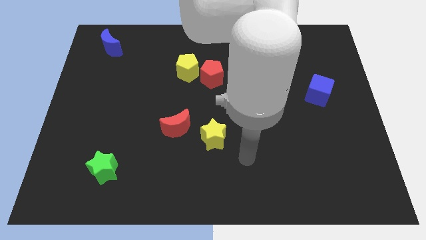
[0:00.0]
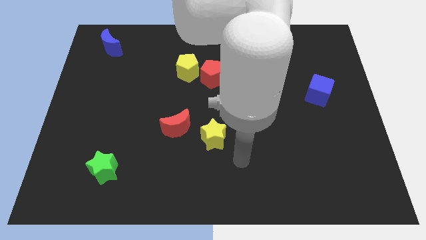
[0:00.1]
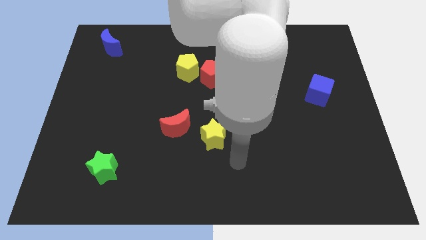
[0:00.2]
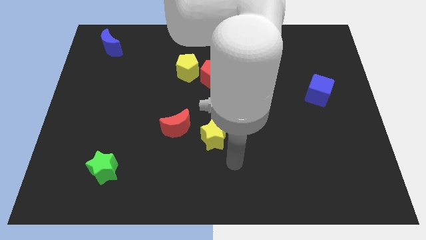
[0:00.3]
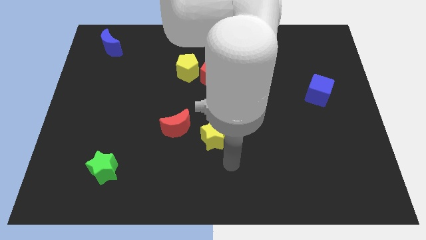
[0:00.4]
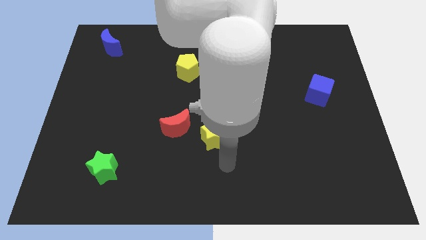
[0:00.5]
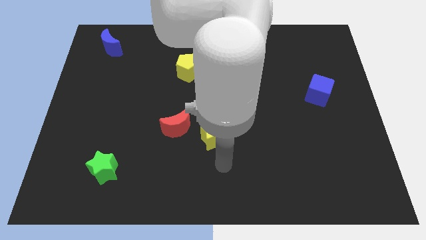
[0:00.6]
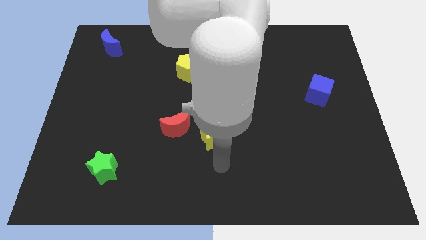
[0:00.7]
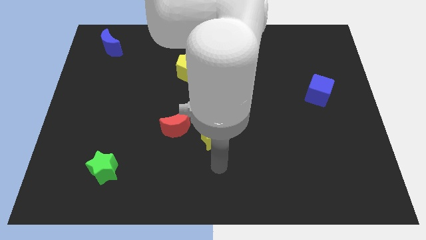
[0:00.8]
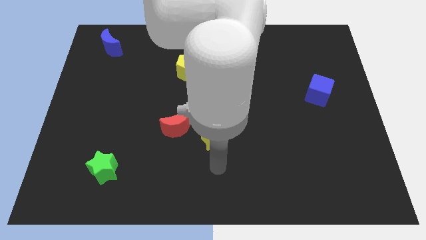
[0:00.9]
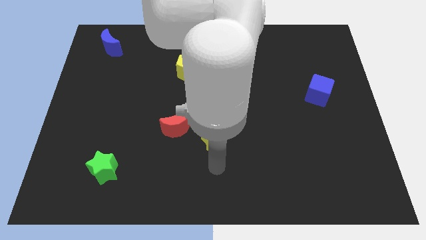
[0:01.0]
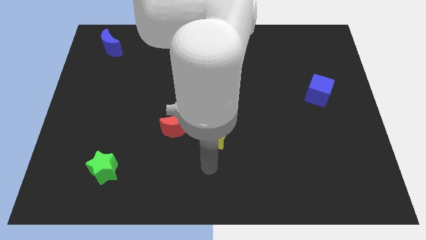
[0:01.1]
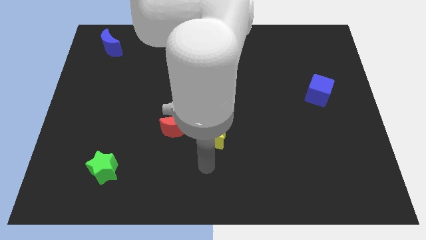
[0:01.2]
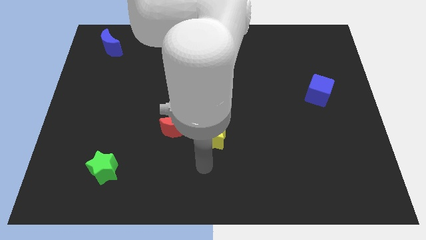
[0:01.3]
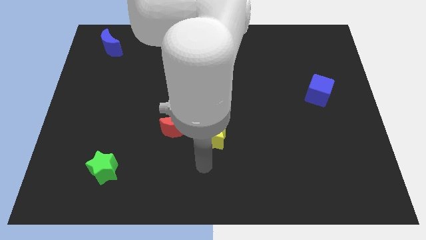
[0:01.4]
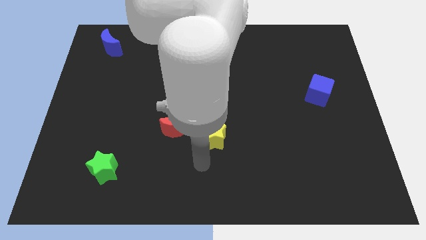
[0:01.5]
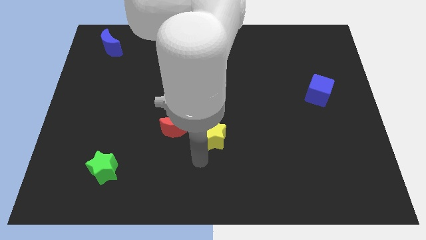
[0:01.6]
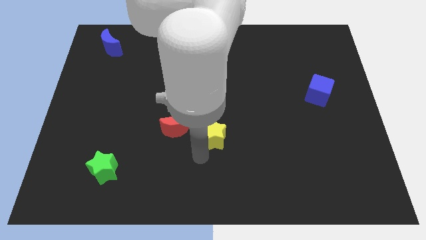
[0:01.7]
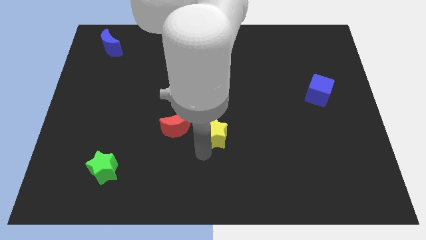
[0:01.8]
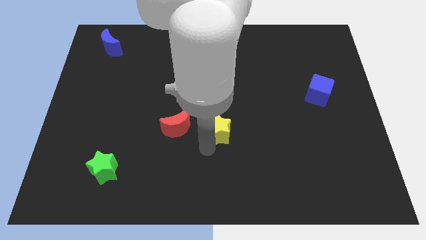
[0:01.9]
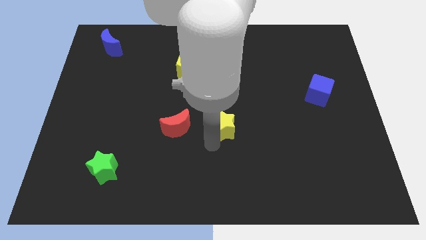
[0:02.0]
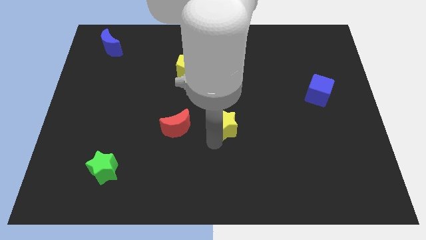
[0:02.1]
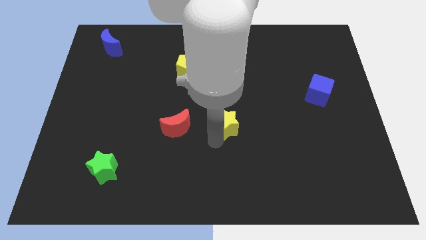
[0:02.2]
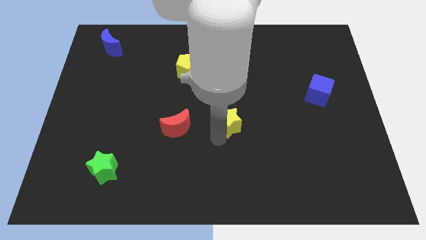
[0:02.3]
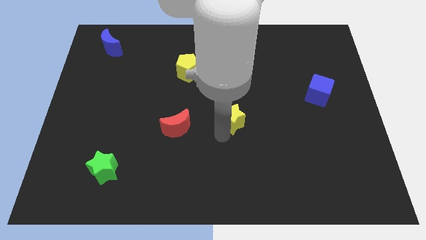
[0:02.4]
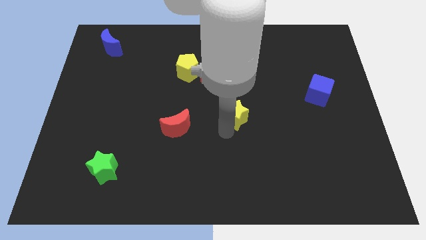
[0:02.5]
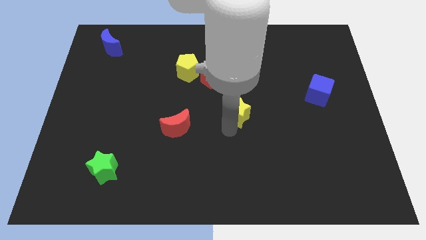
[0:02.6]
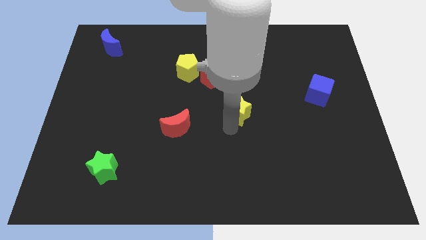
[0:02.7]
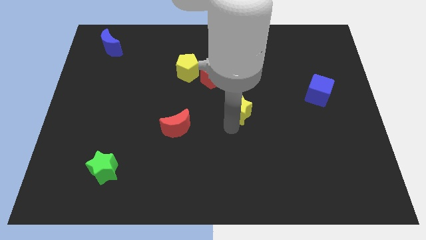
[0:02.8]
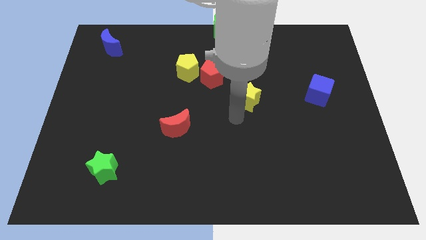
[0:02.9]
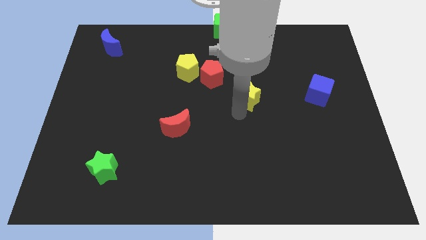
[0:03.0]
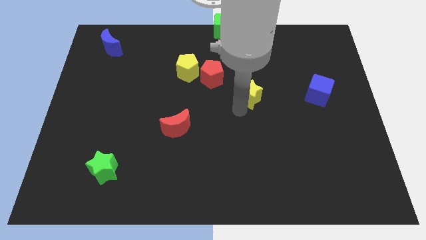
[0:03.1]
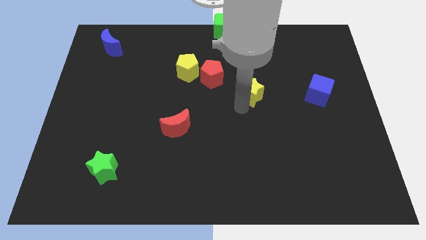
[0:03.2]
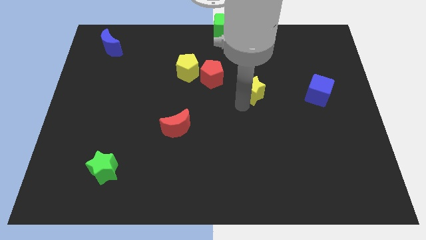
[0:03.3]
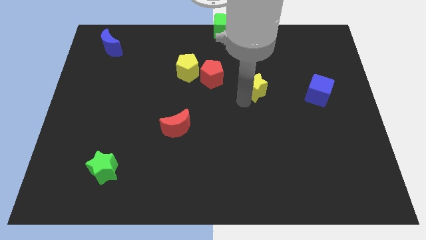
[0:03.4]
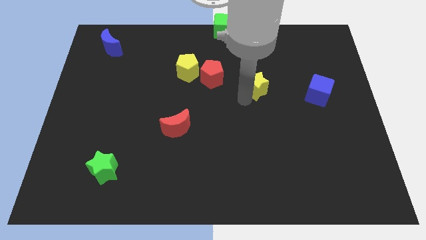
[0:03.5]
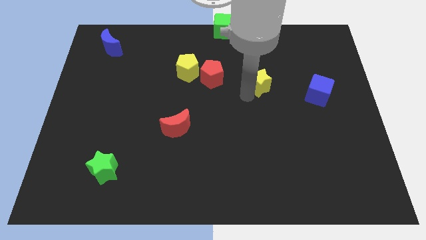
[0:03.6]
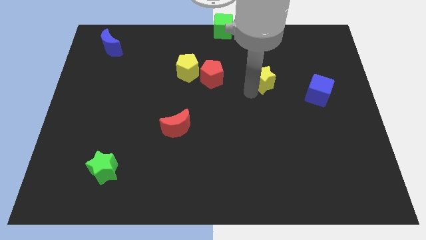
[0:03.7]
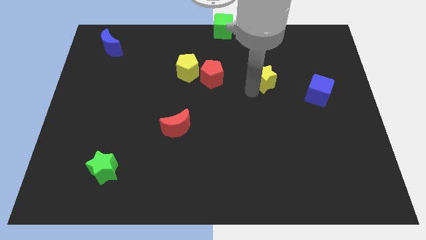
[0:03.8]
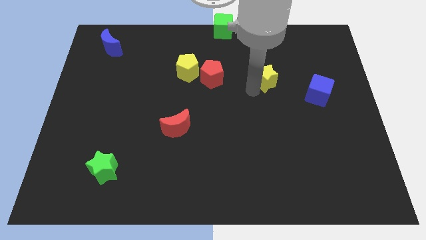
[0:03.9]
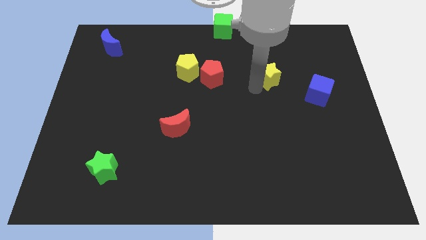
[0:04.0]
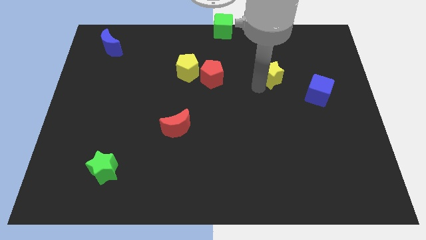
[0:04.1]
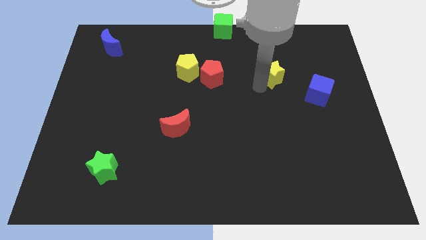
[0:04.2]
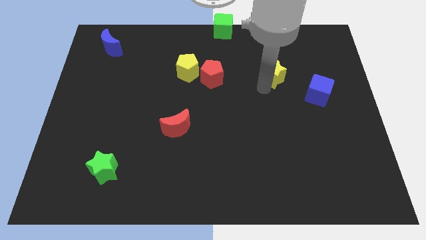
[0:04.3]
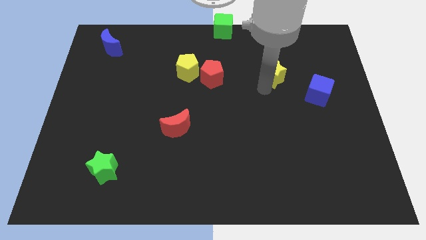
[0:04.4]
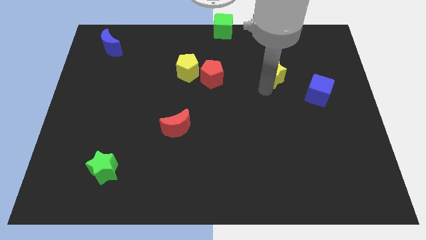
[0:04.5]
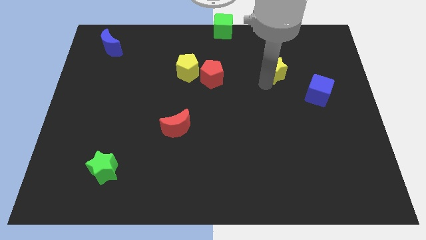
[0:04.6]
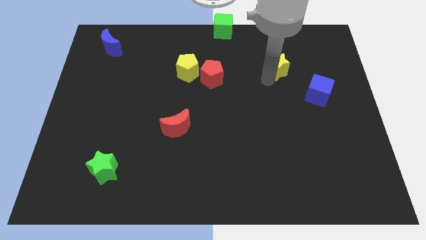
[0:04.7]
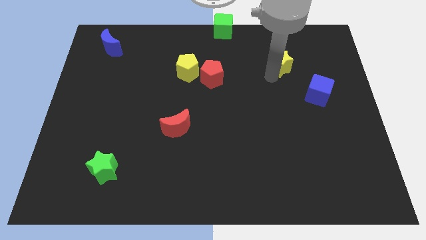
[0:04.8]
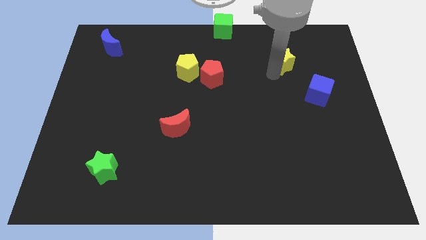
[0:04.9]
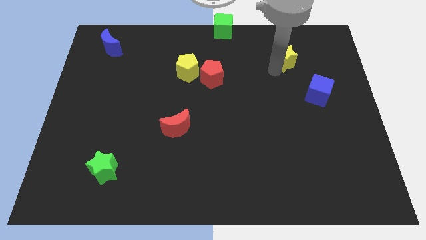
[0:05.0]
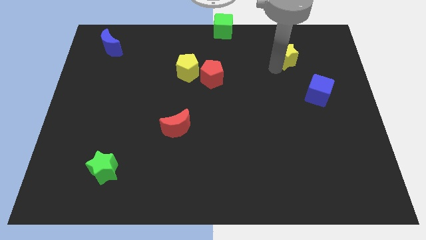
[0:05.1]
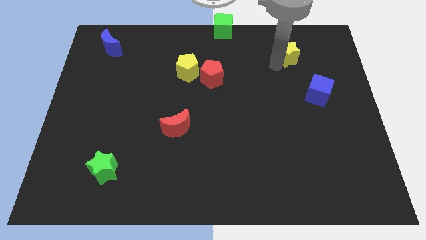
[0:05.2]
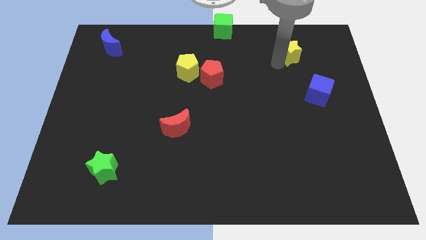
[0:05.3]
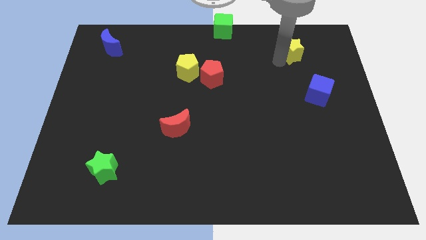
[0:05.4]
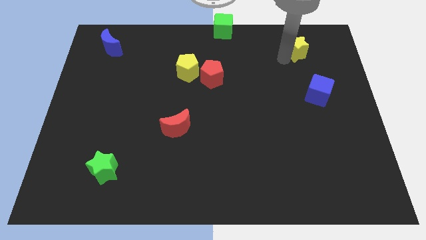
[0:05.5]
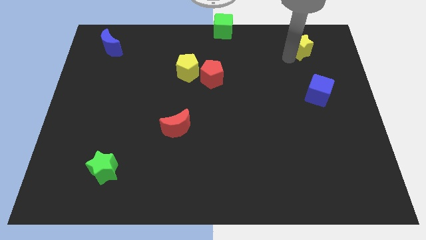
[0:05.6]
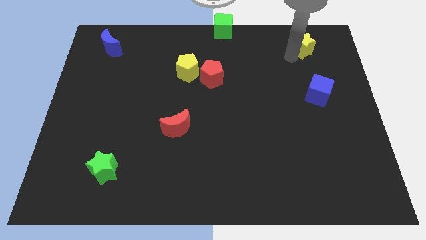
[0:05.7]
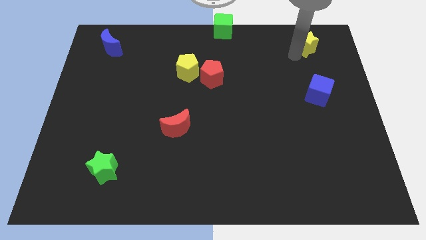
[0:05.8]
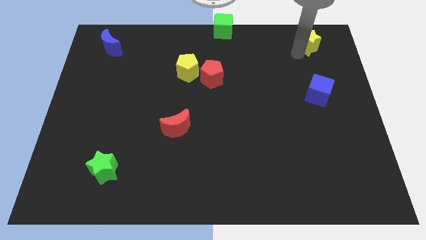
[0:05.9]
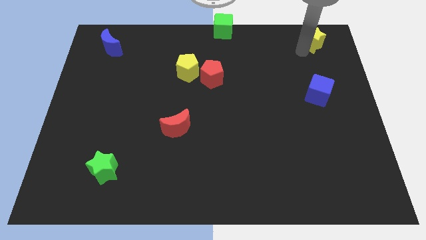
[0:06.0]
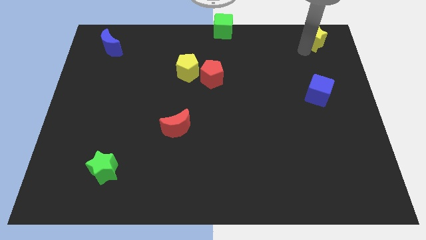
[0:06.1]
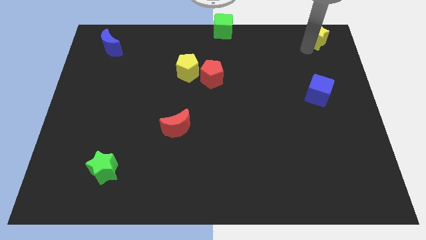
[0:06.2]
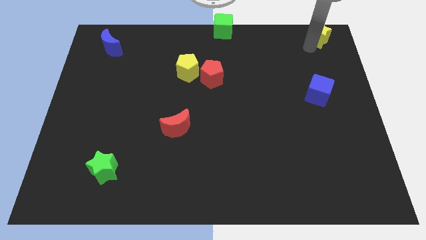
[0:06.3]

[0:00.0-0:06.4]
place the yellow star vertically above the blue cube

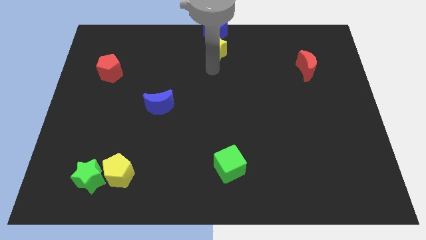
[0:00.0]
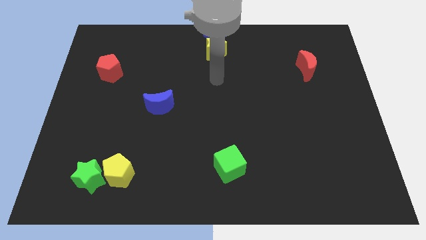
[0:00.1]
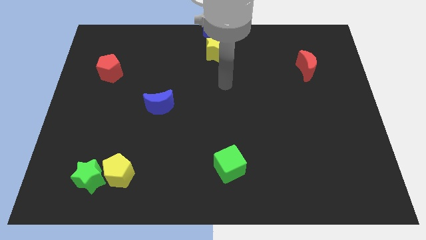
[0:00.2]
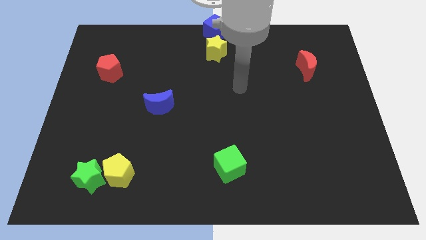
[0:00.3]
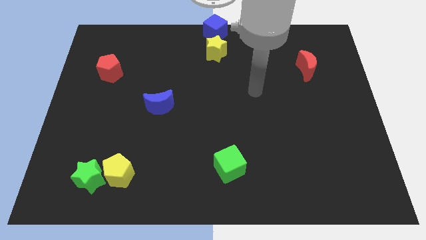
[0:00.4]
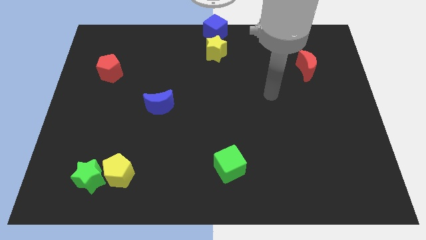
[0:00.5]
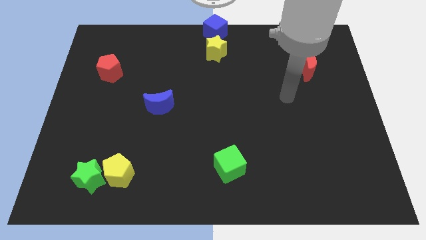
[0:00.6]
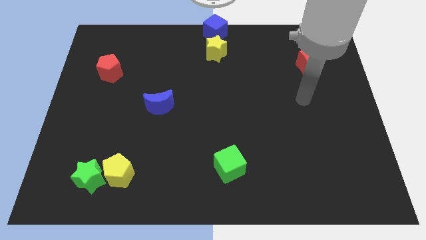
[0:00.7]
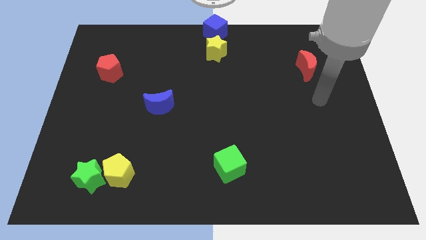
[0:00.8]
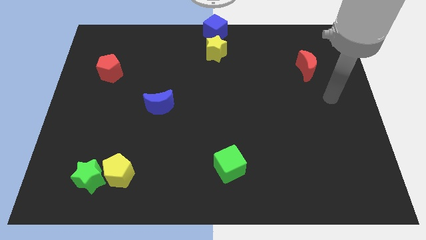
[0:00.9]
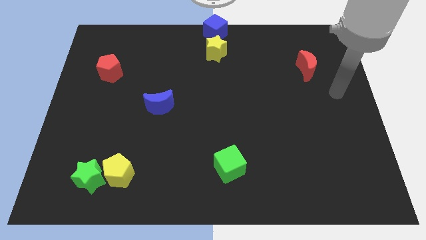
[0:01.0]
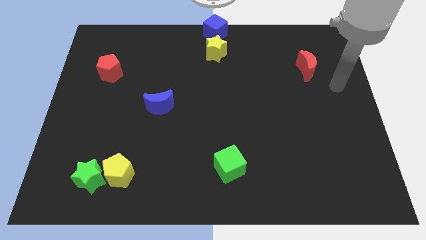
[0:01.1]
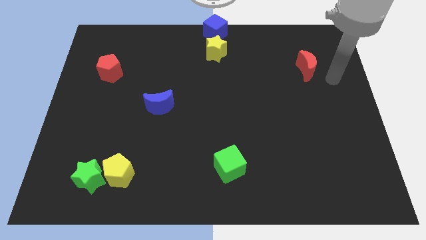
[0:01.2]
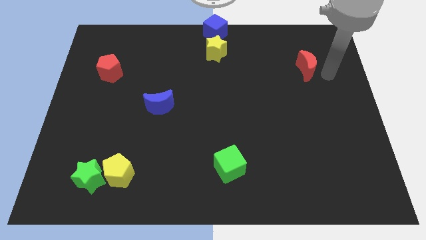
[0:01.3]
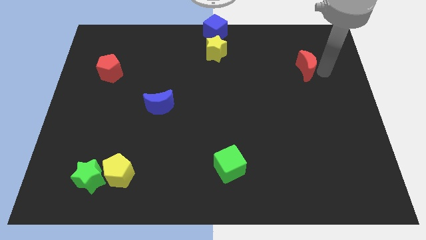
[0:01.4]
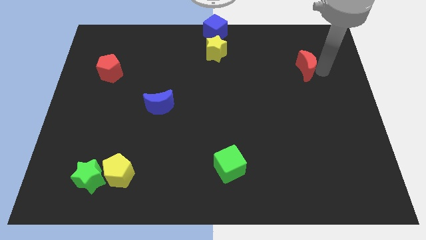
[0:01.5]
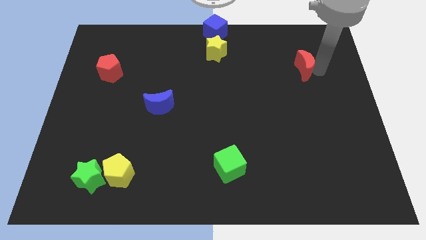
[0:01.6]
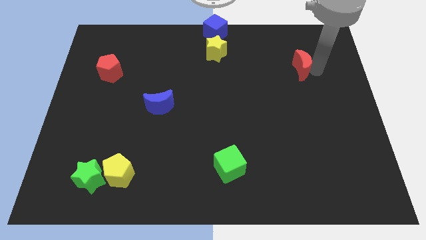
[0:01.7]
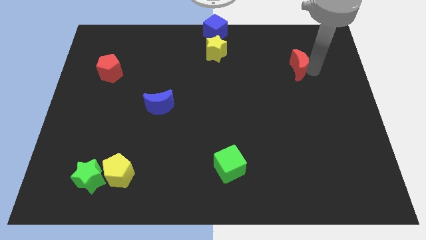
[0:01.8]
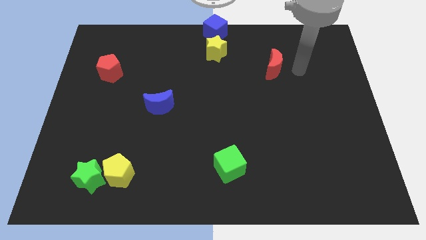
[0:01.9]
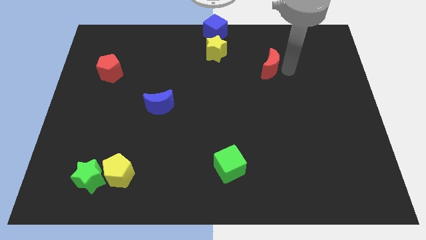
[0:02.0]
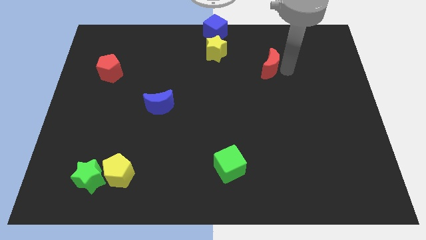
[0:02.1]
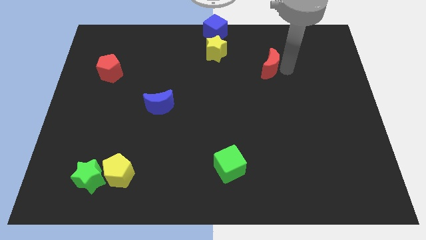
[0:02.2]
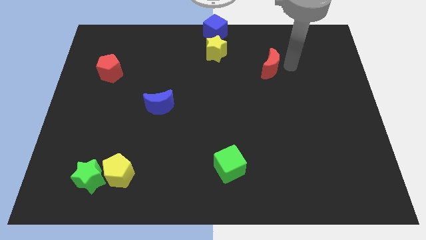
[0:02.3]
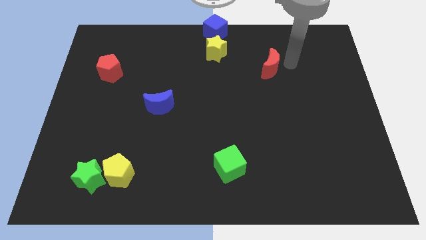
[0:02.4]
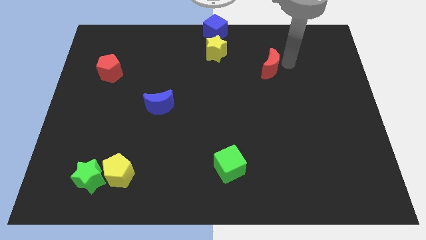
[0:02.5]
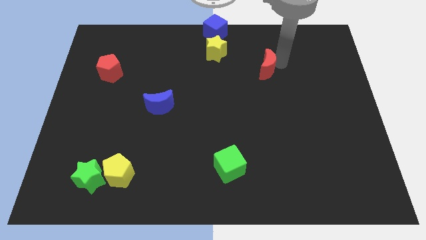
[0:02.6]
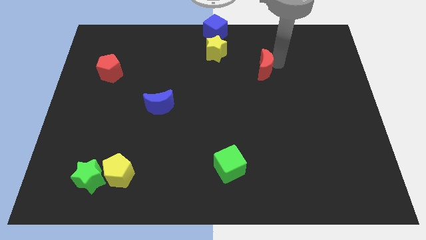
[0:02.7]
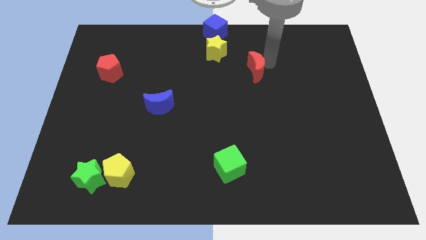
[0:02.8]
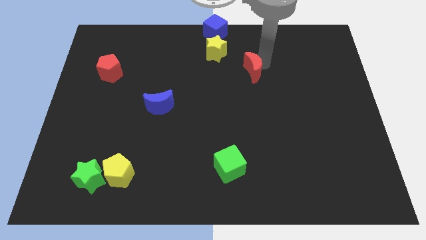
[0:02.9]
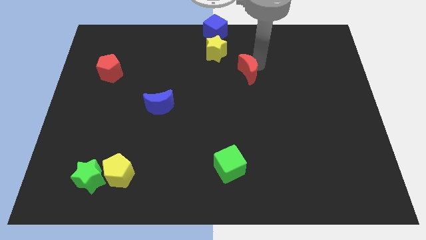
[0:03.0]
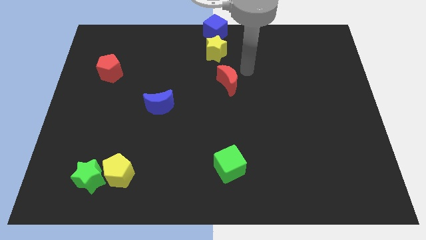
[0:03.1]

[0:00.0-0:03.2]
push the red crescent to the bottom right of the yellow star
